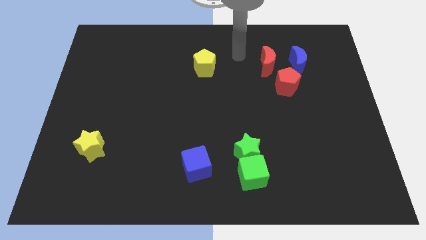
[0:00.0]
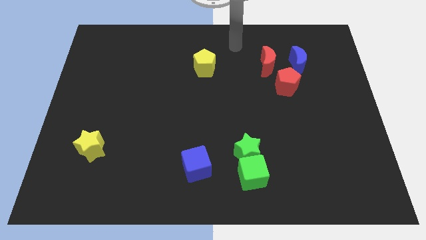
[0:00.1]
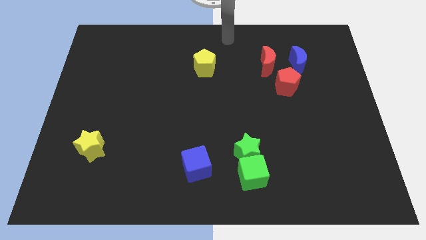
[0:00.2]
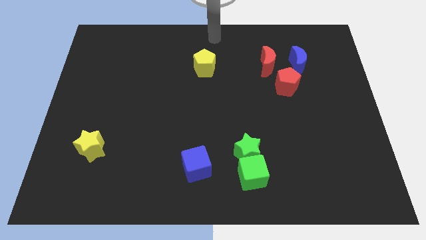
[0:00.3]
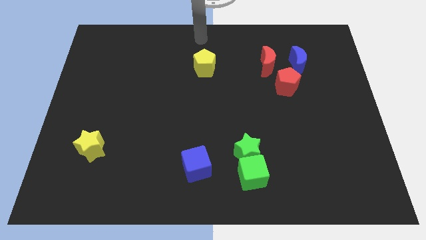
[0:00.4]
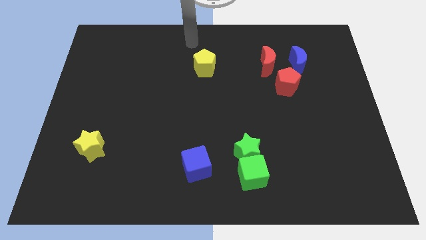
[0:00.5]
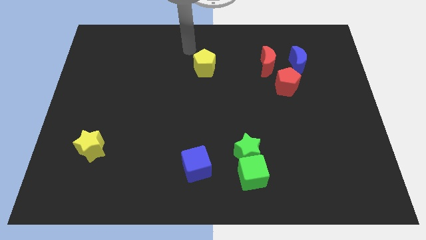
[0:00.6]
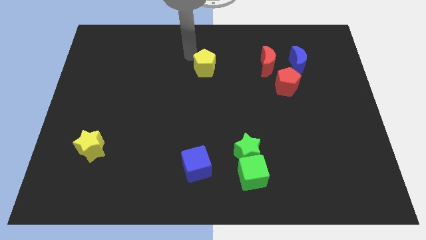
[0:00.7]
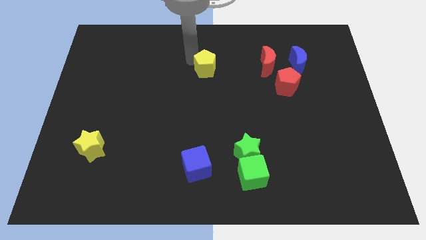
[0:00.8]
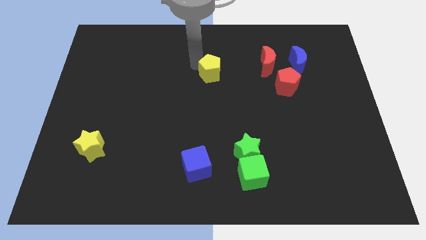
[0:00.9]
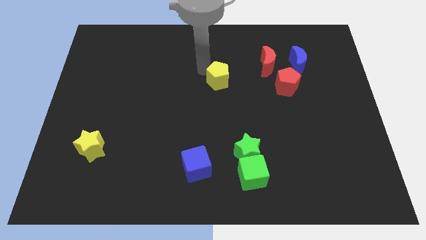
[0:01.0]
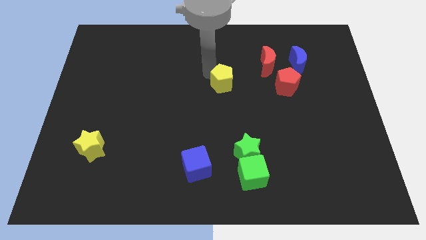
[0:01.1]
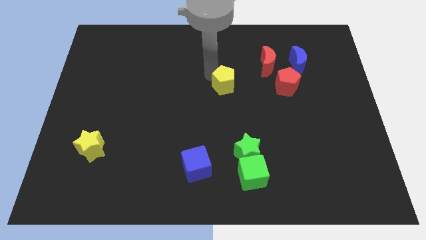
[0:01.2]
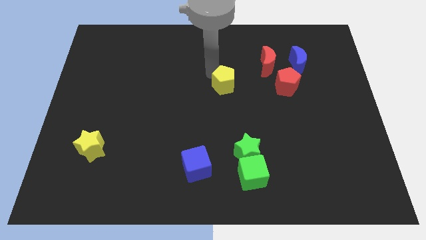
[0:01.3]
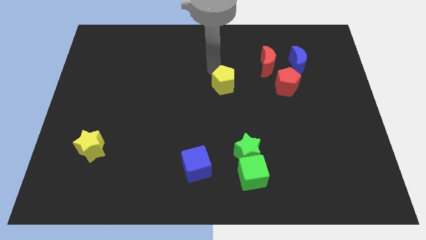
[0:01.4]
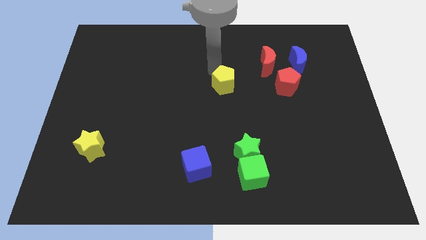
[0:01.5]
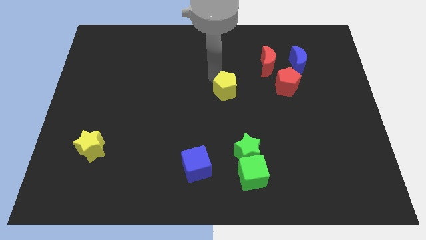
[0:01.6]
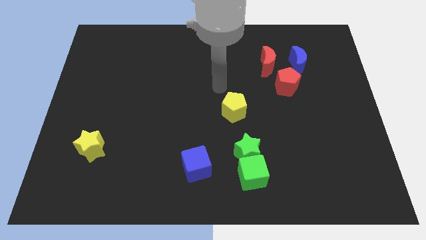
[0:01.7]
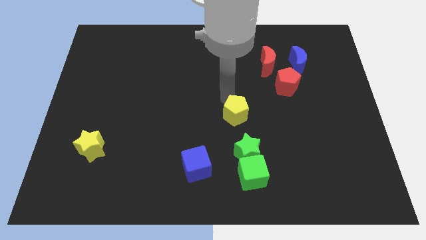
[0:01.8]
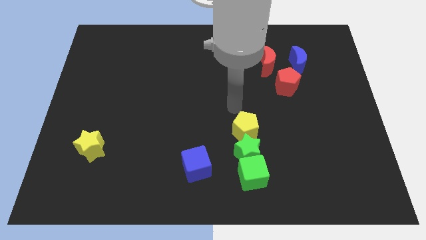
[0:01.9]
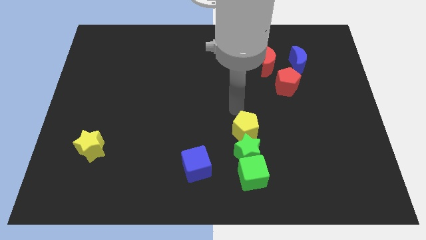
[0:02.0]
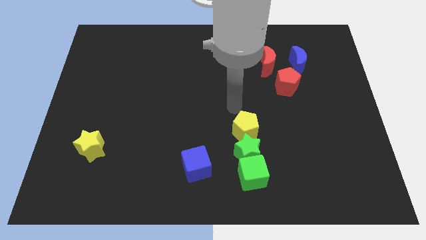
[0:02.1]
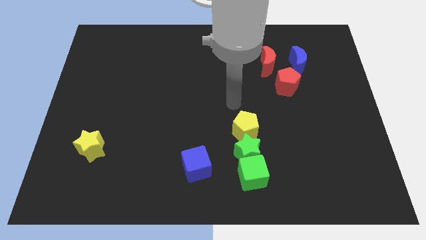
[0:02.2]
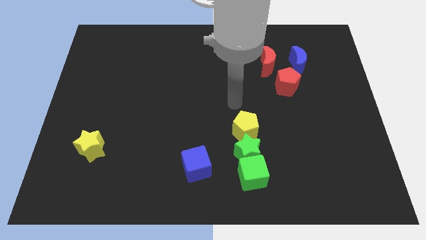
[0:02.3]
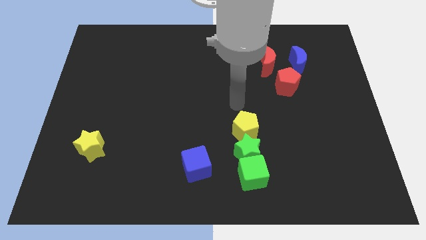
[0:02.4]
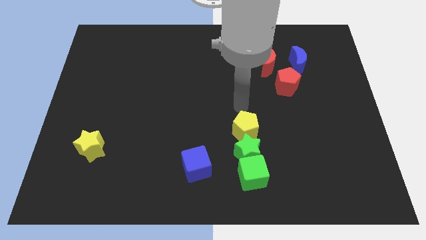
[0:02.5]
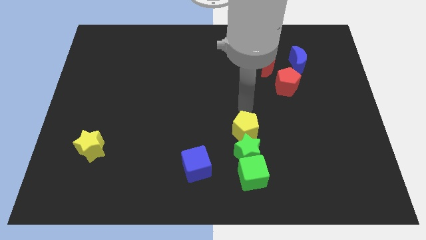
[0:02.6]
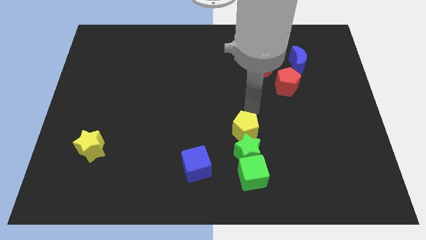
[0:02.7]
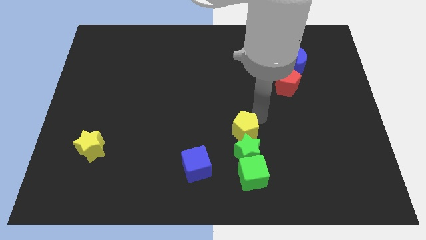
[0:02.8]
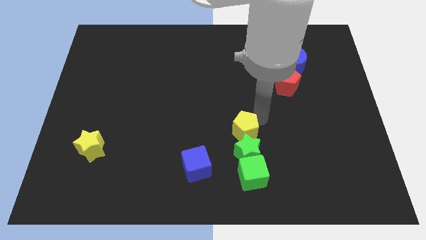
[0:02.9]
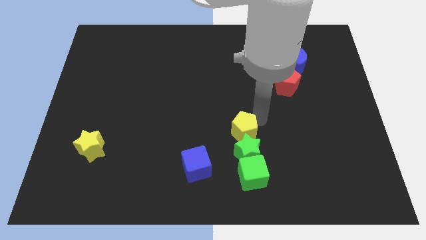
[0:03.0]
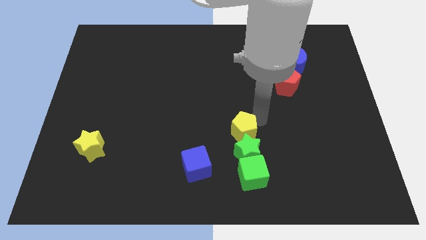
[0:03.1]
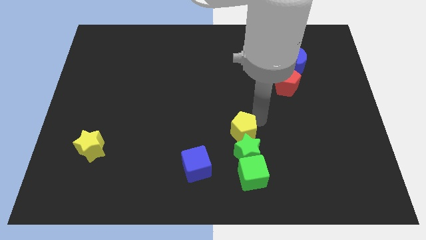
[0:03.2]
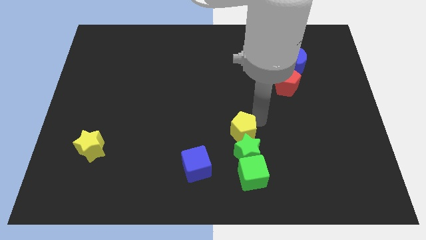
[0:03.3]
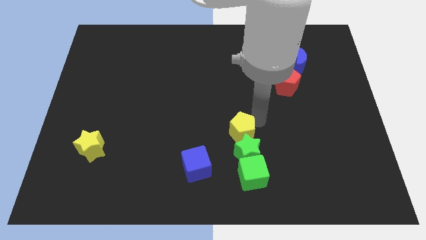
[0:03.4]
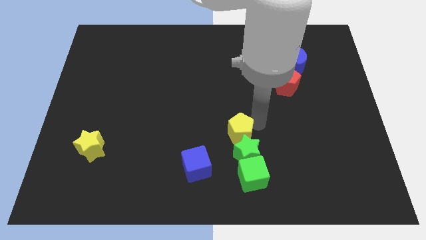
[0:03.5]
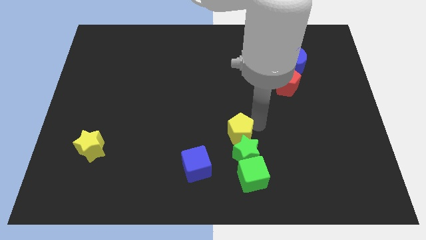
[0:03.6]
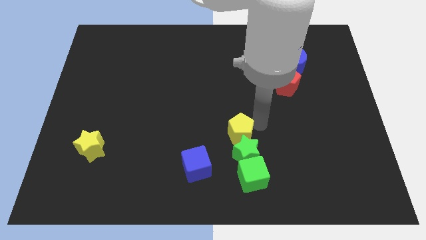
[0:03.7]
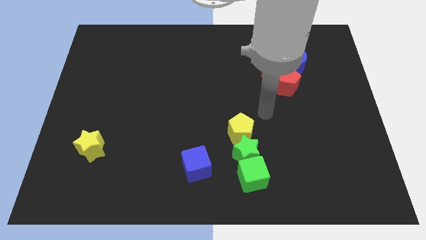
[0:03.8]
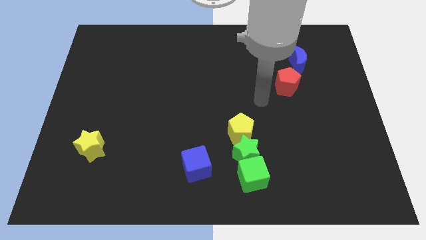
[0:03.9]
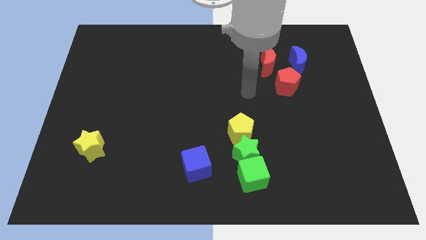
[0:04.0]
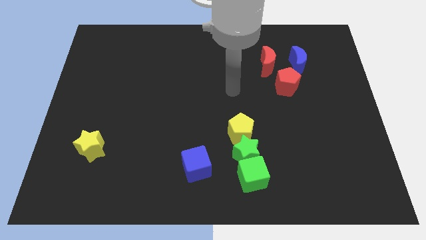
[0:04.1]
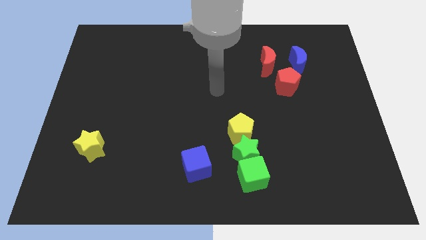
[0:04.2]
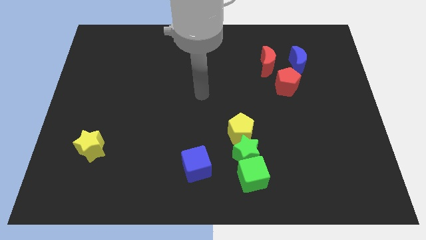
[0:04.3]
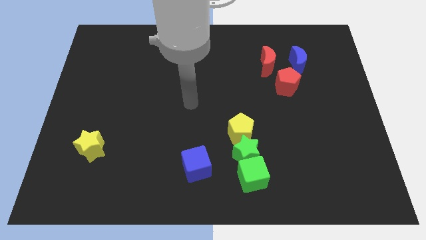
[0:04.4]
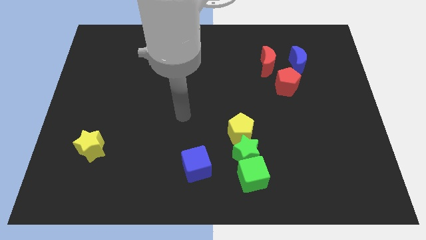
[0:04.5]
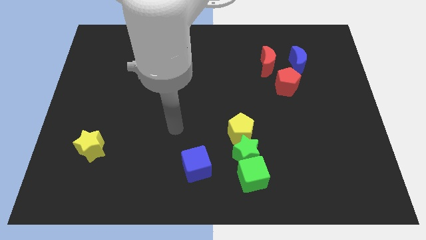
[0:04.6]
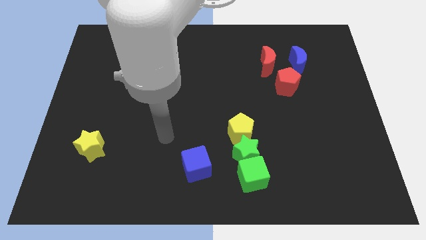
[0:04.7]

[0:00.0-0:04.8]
place the yellow pentagon above the green star

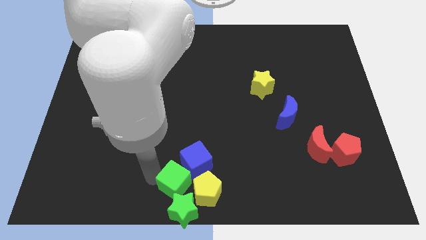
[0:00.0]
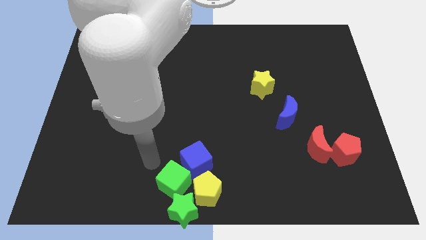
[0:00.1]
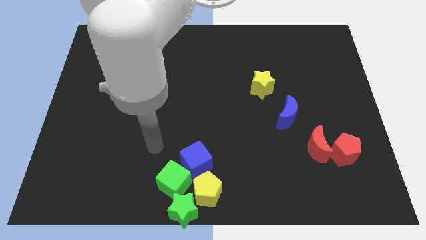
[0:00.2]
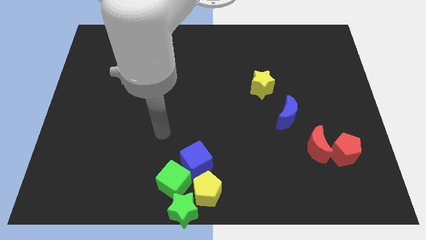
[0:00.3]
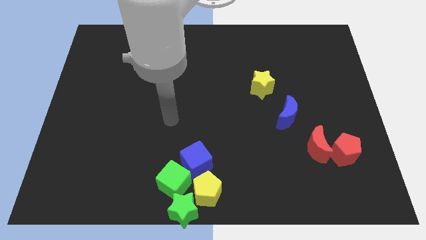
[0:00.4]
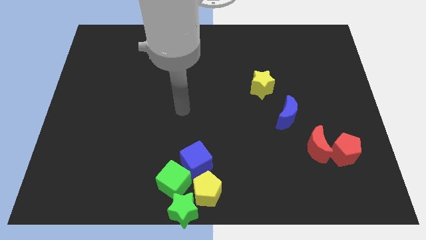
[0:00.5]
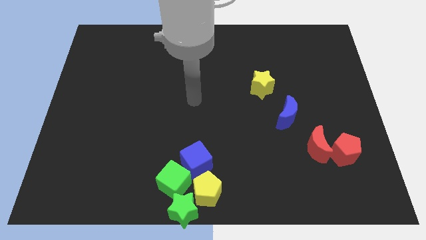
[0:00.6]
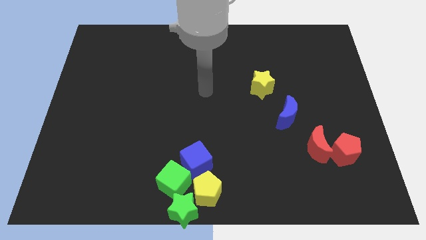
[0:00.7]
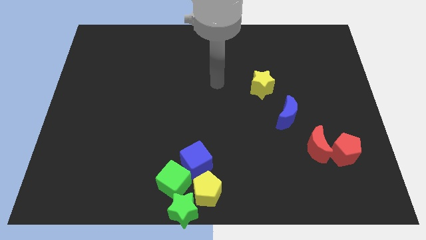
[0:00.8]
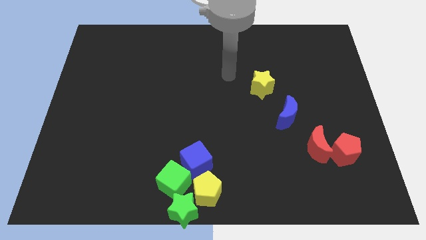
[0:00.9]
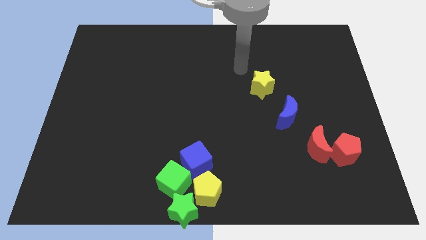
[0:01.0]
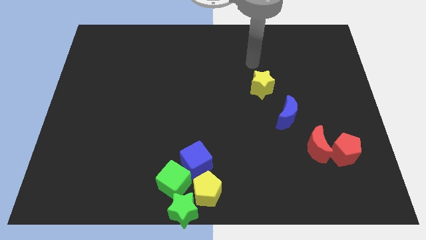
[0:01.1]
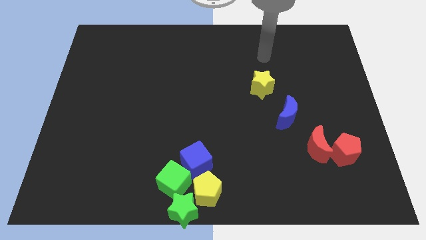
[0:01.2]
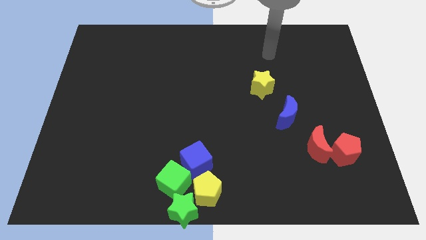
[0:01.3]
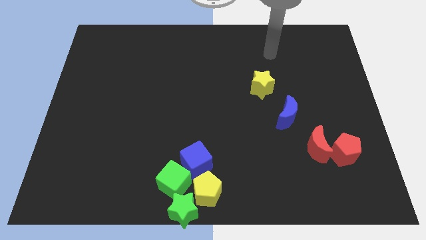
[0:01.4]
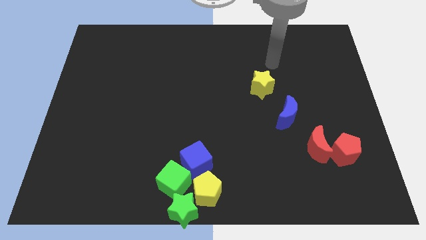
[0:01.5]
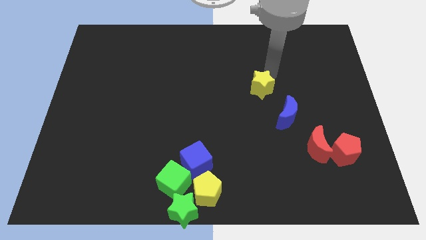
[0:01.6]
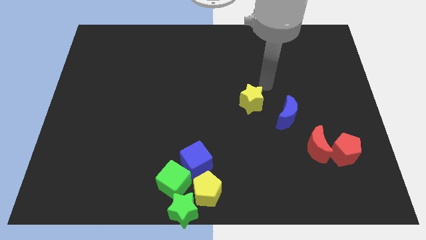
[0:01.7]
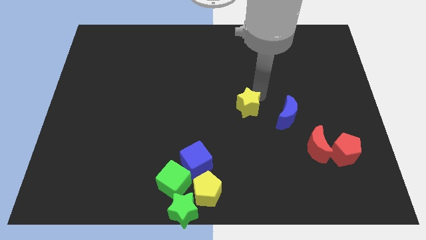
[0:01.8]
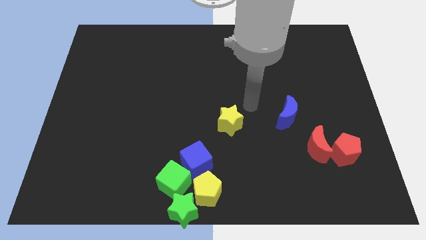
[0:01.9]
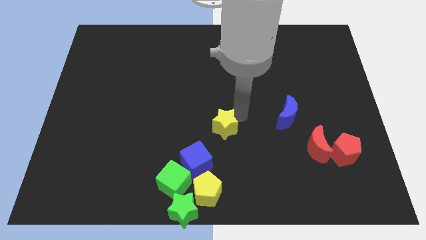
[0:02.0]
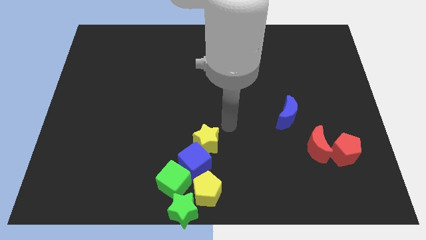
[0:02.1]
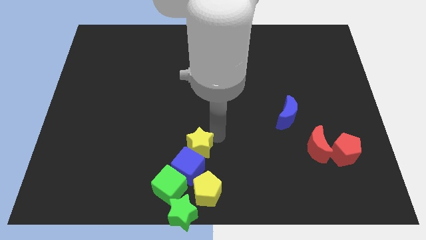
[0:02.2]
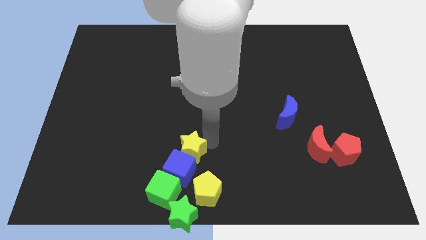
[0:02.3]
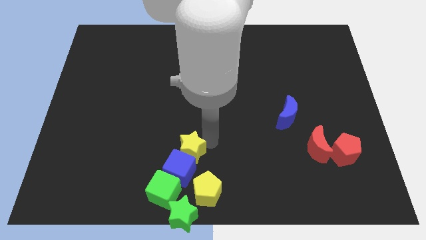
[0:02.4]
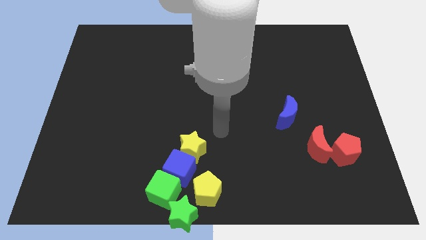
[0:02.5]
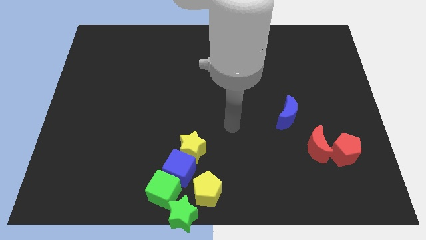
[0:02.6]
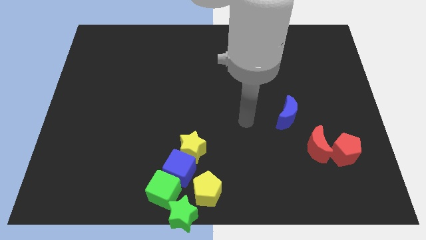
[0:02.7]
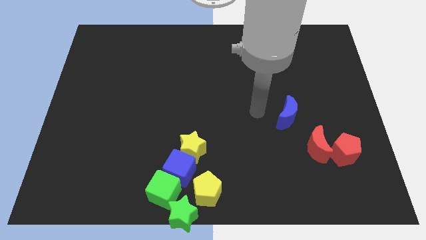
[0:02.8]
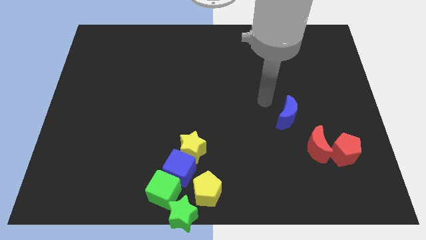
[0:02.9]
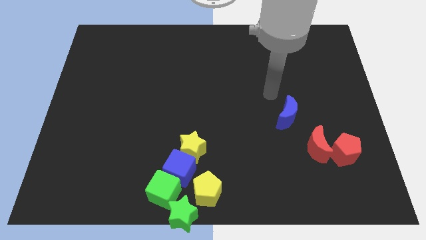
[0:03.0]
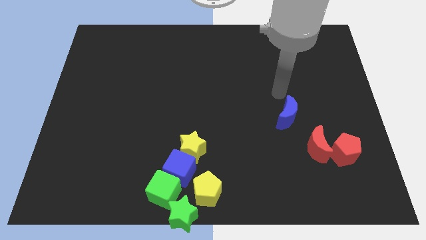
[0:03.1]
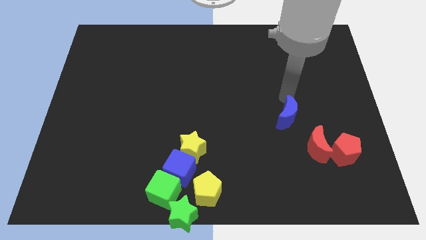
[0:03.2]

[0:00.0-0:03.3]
place the yellow star on top of the blue cube

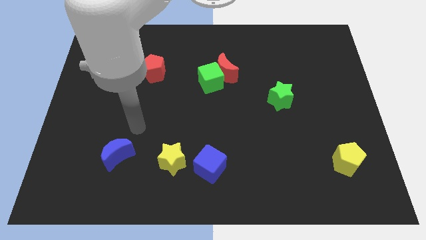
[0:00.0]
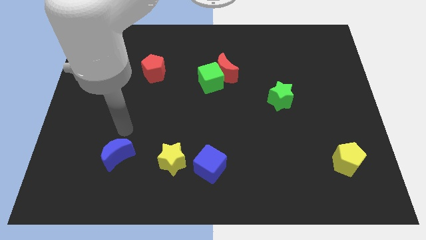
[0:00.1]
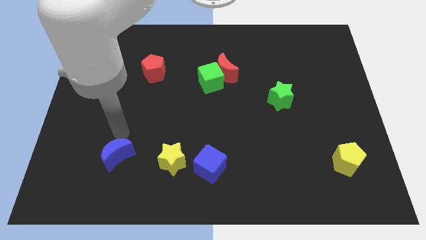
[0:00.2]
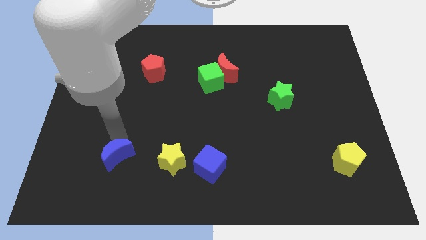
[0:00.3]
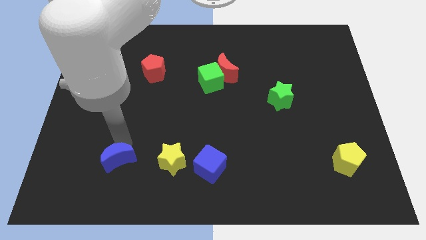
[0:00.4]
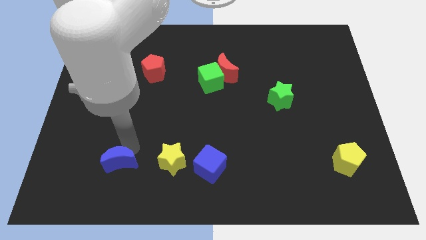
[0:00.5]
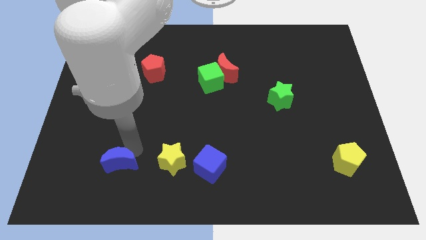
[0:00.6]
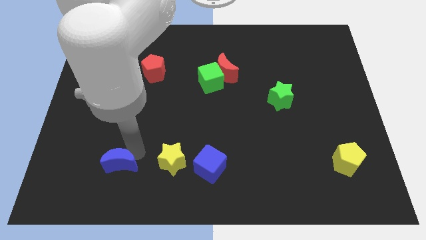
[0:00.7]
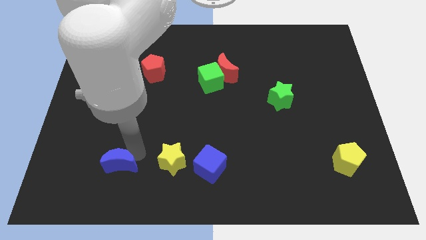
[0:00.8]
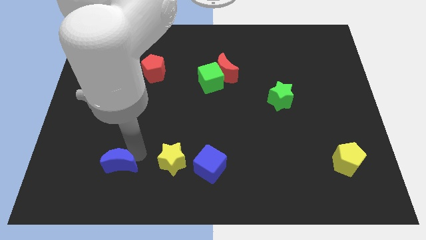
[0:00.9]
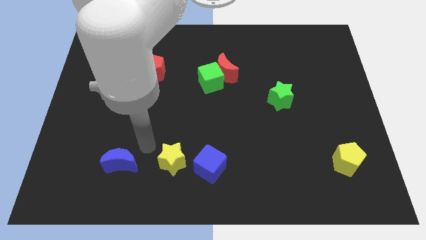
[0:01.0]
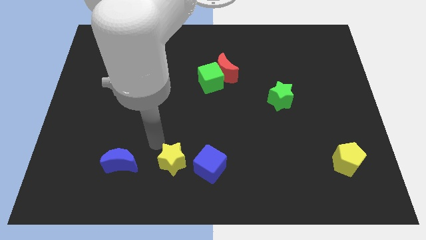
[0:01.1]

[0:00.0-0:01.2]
push the blue crescent downward
